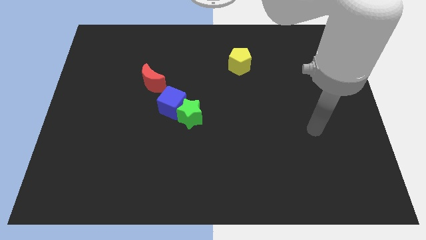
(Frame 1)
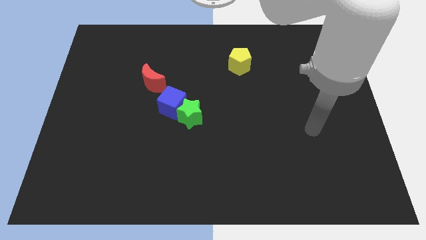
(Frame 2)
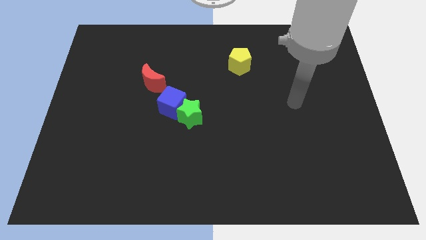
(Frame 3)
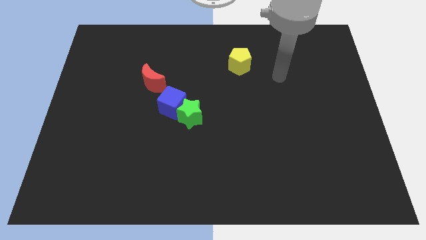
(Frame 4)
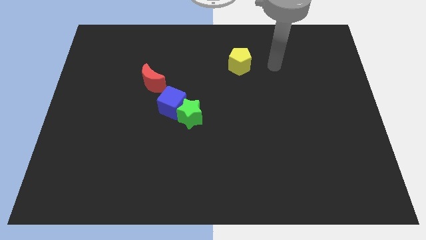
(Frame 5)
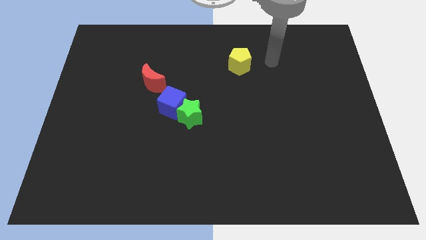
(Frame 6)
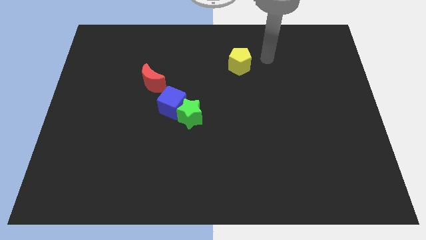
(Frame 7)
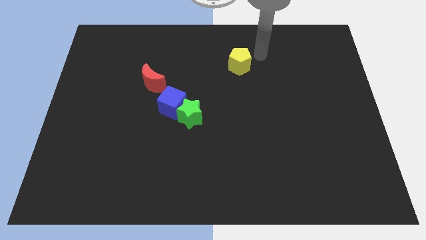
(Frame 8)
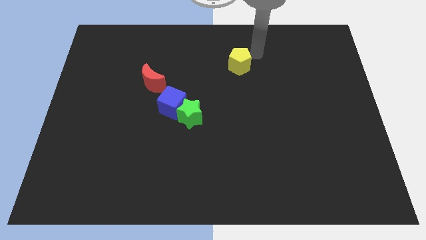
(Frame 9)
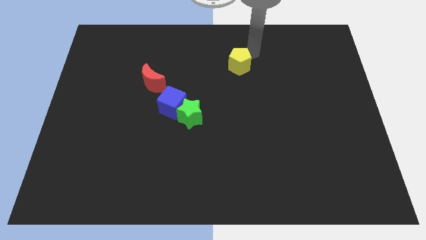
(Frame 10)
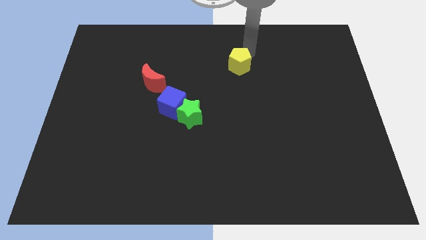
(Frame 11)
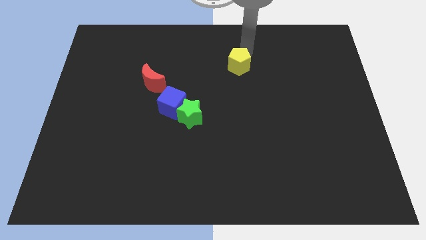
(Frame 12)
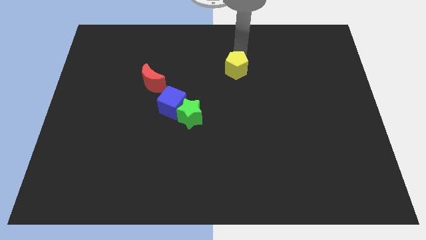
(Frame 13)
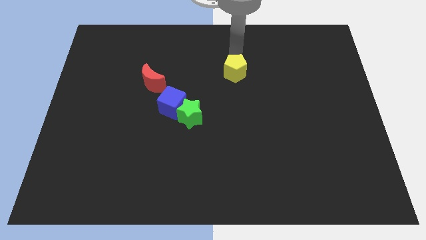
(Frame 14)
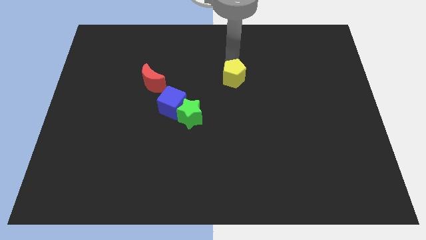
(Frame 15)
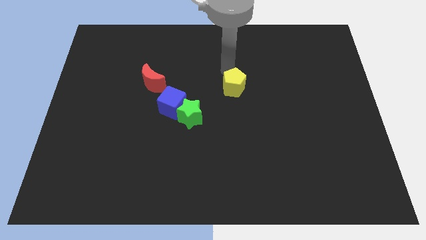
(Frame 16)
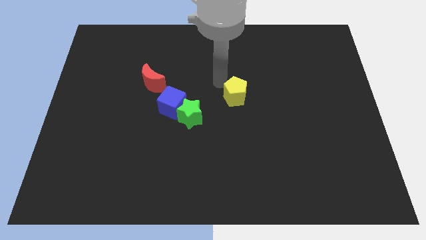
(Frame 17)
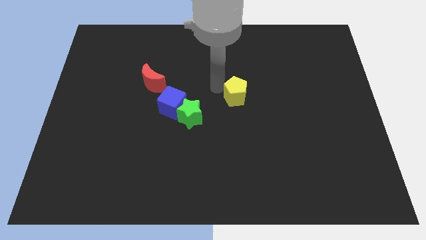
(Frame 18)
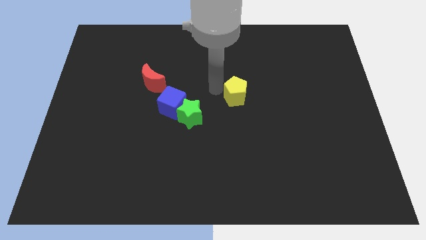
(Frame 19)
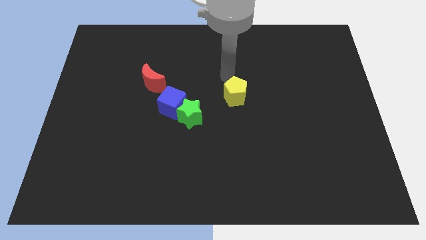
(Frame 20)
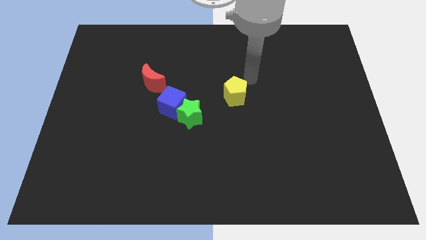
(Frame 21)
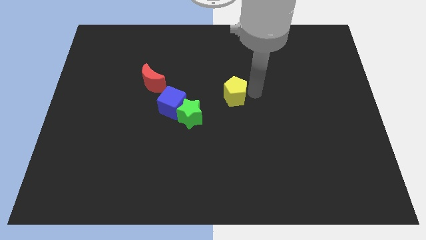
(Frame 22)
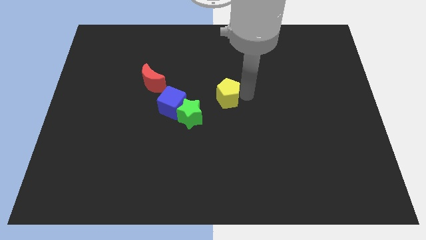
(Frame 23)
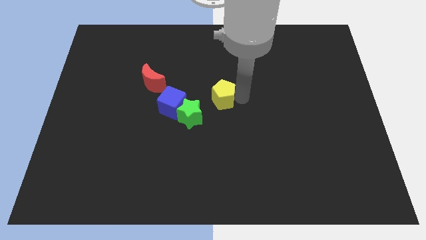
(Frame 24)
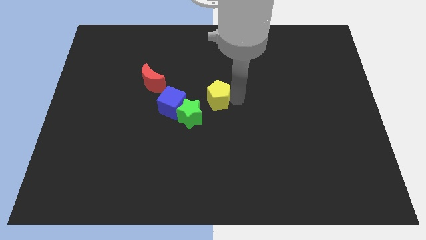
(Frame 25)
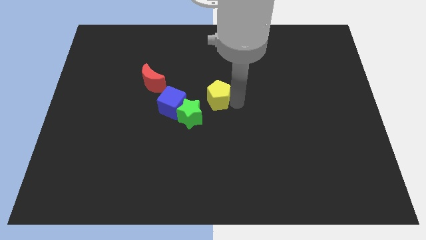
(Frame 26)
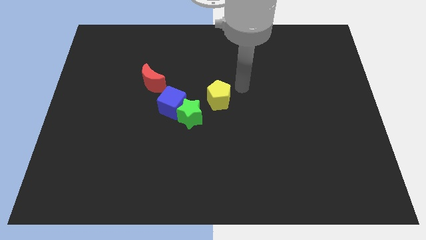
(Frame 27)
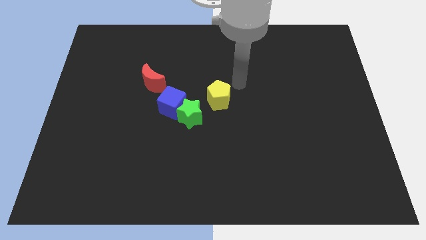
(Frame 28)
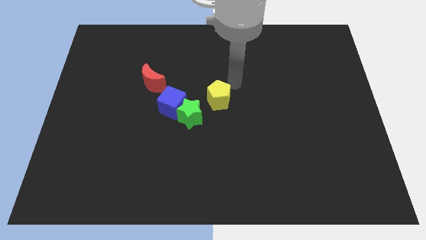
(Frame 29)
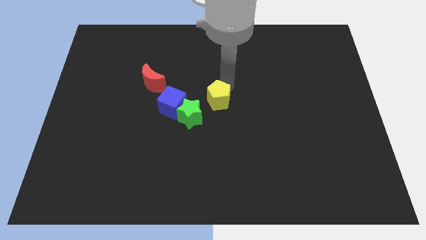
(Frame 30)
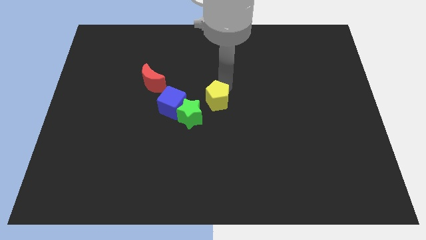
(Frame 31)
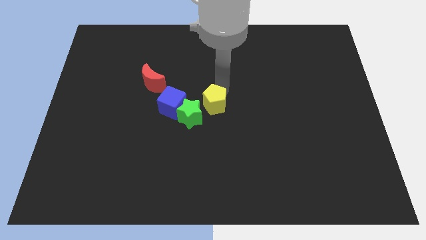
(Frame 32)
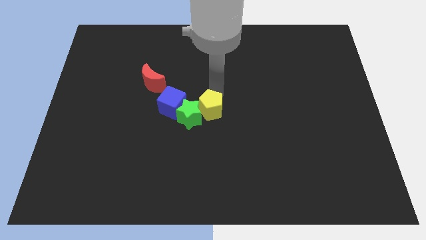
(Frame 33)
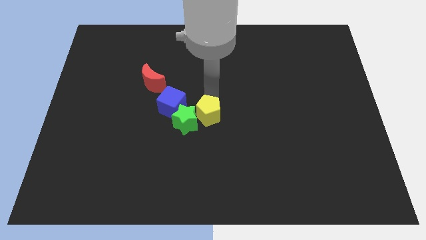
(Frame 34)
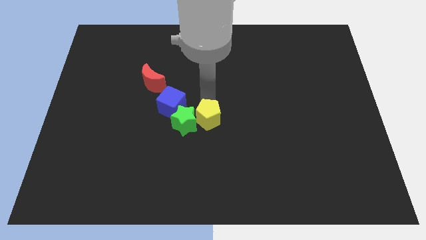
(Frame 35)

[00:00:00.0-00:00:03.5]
slide the yellow block next to the star

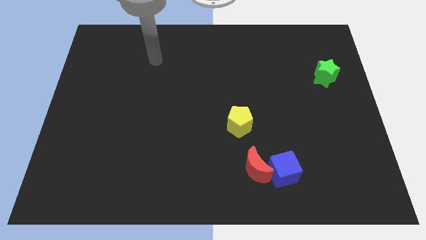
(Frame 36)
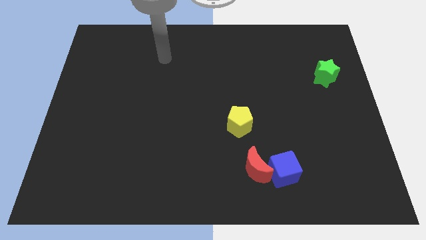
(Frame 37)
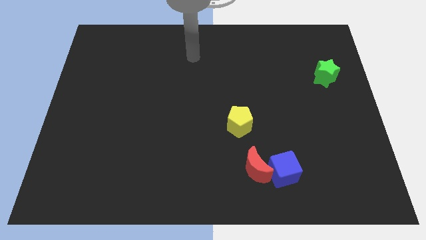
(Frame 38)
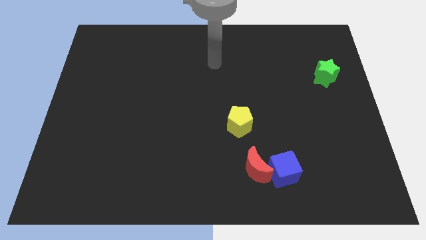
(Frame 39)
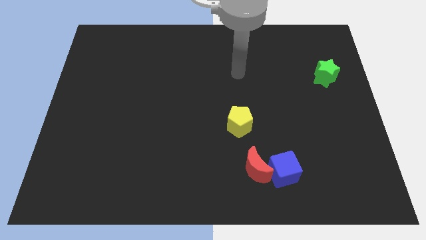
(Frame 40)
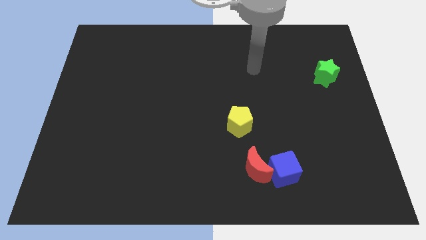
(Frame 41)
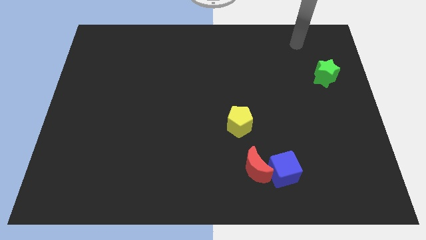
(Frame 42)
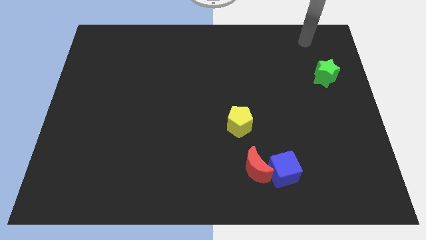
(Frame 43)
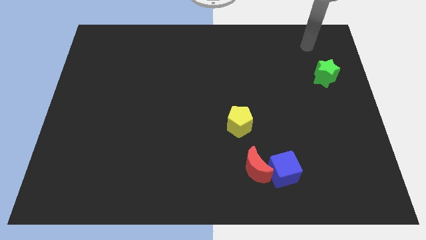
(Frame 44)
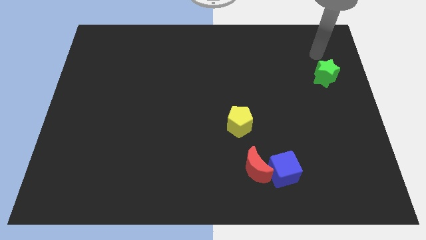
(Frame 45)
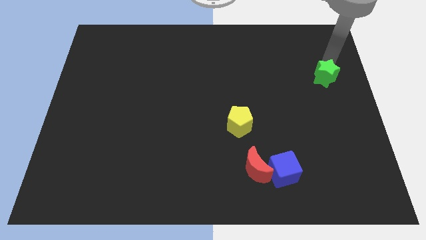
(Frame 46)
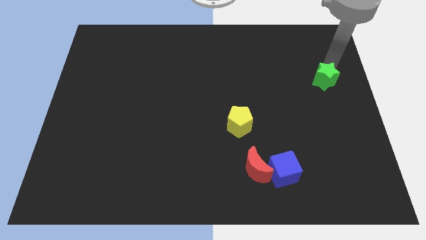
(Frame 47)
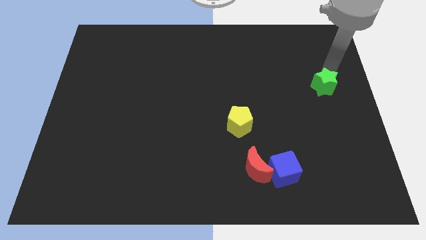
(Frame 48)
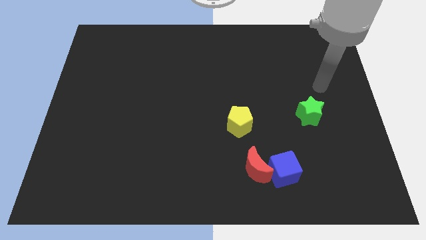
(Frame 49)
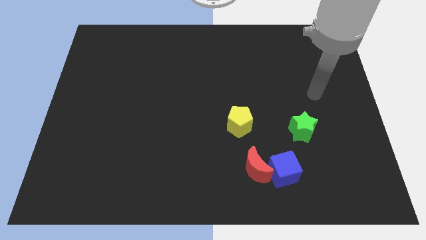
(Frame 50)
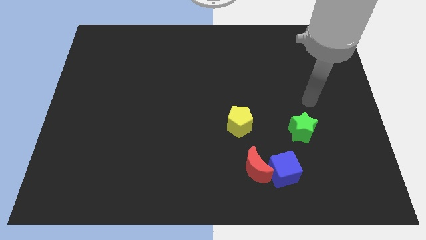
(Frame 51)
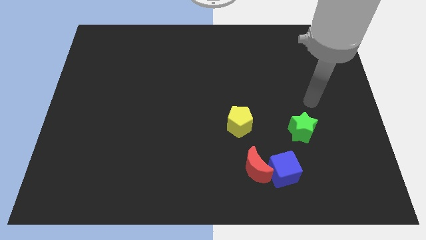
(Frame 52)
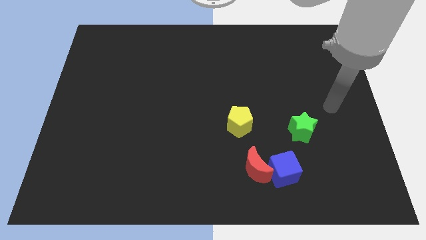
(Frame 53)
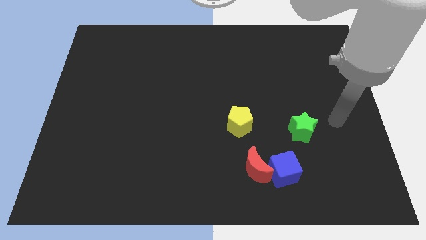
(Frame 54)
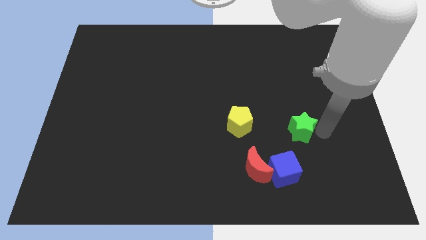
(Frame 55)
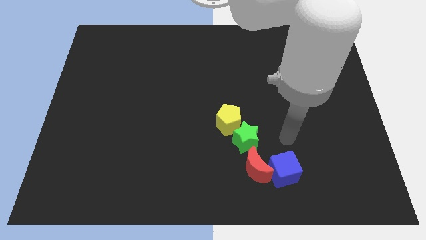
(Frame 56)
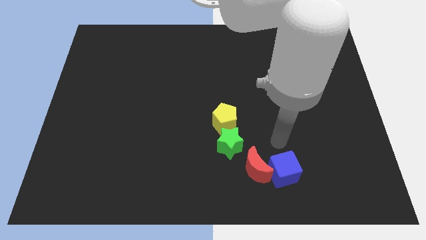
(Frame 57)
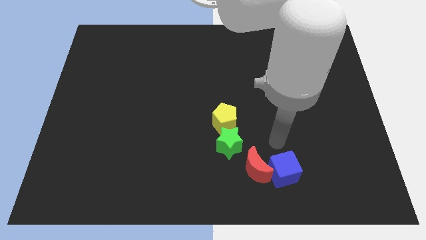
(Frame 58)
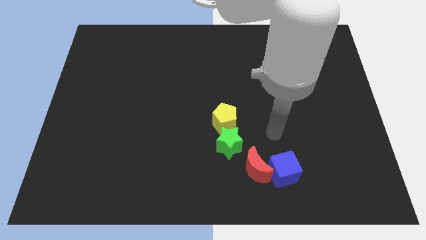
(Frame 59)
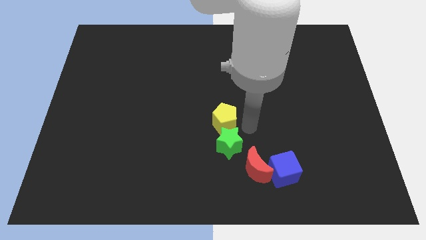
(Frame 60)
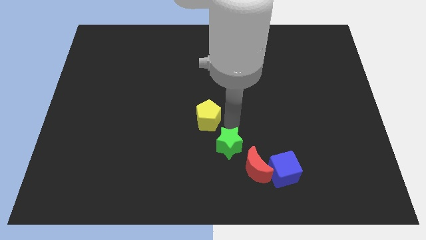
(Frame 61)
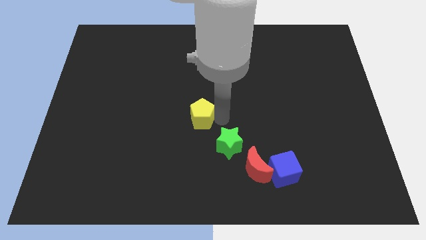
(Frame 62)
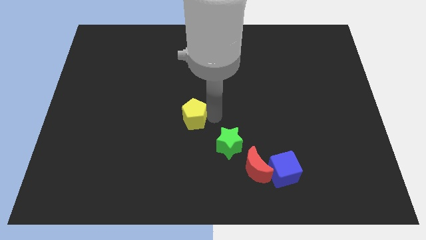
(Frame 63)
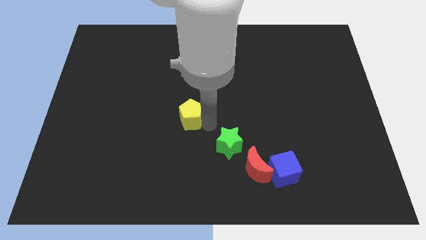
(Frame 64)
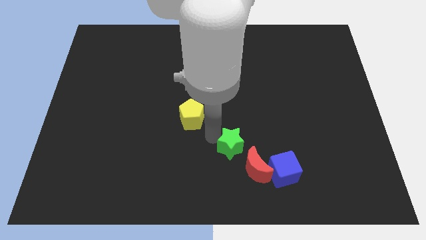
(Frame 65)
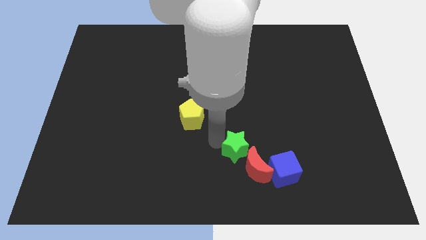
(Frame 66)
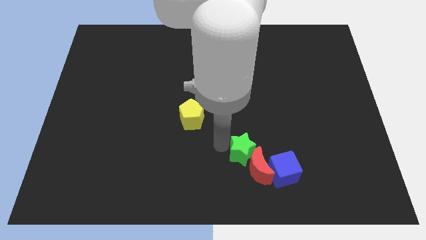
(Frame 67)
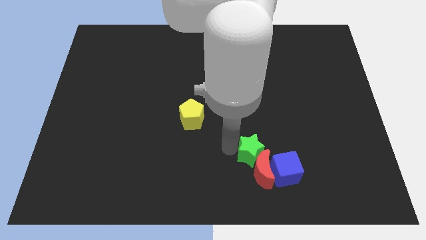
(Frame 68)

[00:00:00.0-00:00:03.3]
put the green block to the red moon

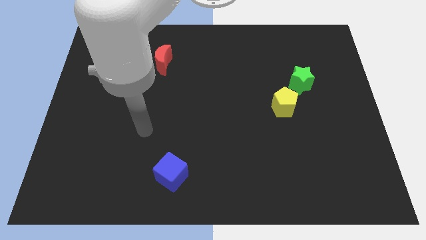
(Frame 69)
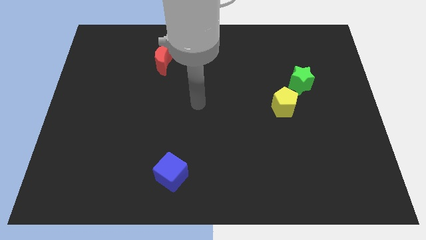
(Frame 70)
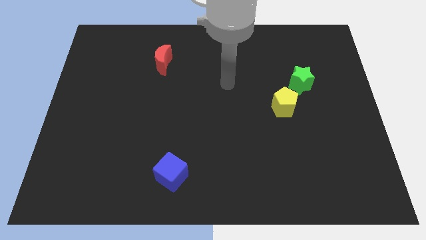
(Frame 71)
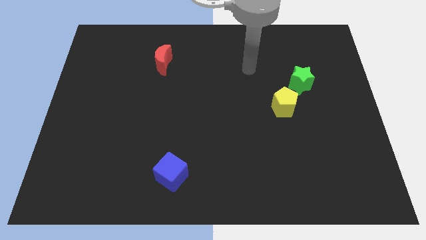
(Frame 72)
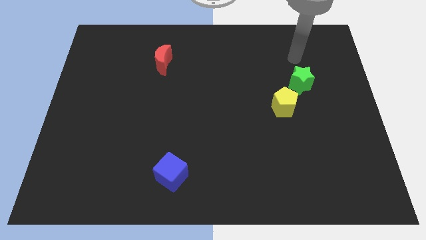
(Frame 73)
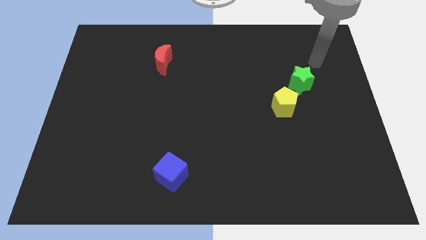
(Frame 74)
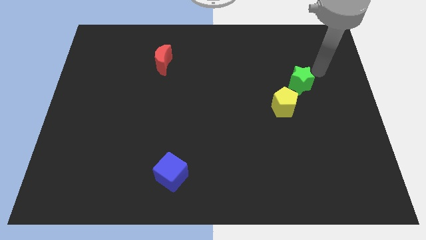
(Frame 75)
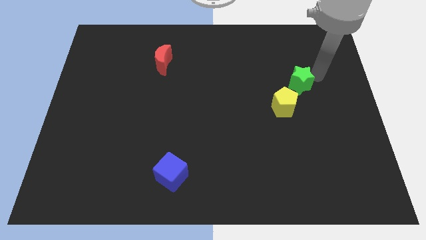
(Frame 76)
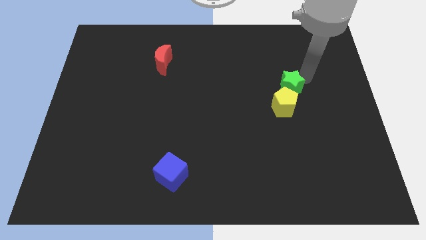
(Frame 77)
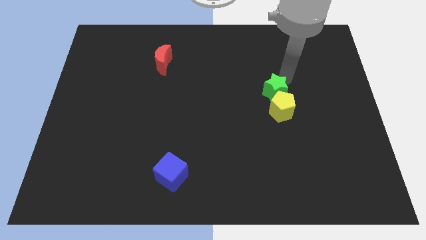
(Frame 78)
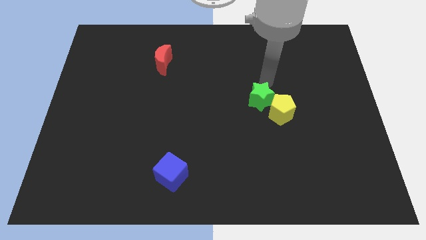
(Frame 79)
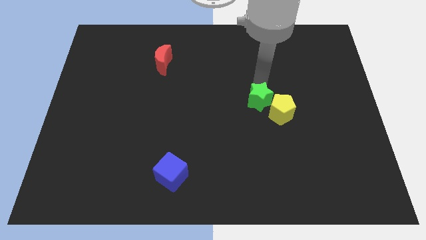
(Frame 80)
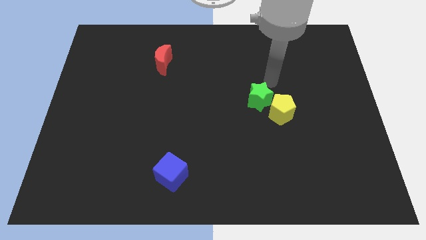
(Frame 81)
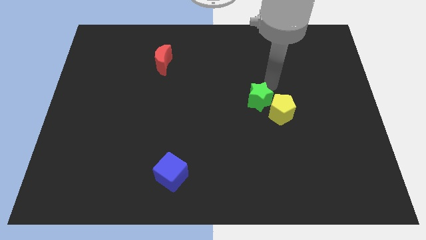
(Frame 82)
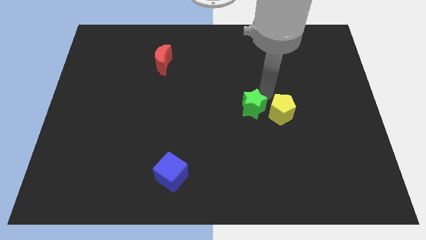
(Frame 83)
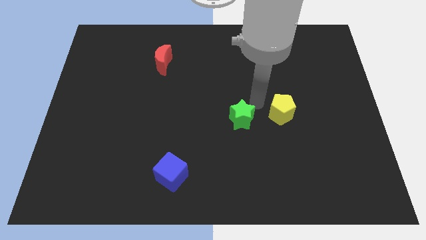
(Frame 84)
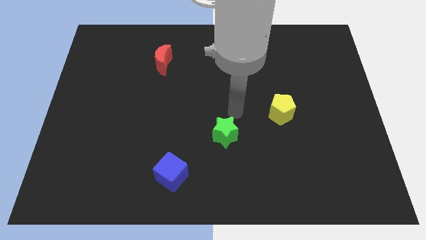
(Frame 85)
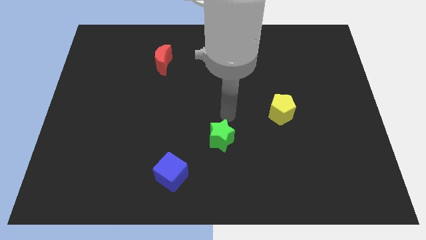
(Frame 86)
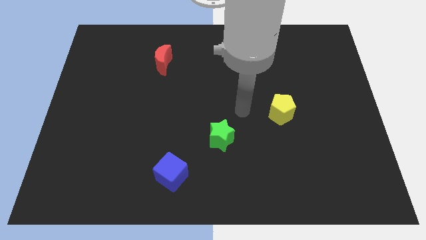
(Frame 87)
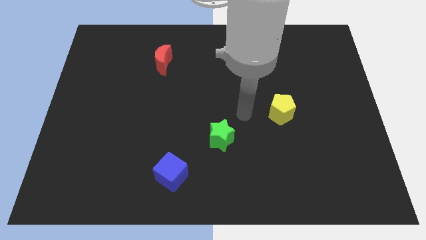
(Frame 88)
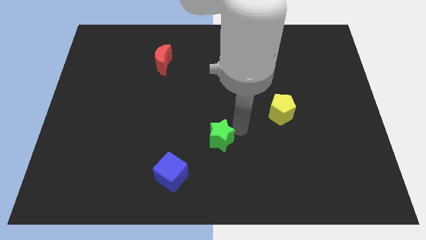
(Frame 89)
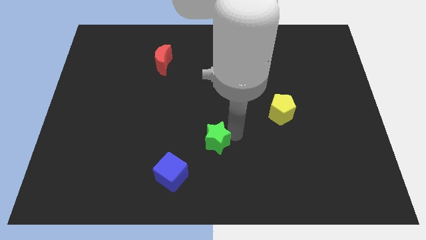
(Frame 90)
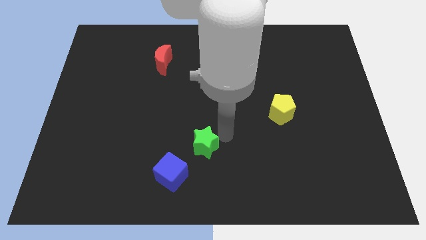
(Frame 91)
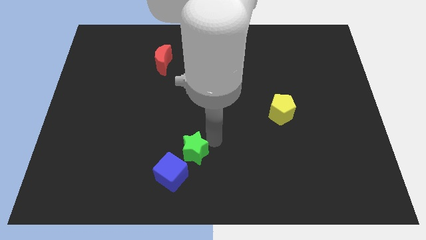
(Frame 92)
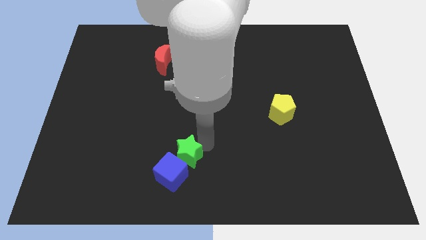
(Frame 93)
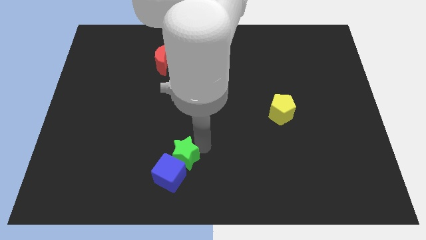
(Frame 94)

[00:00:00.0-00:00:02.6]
slide the star towards the blue cube
